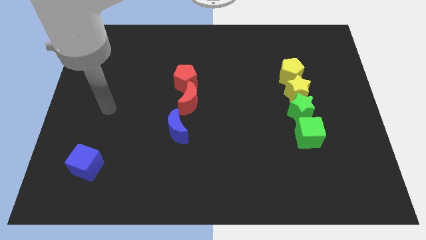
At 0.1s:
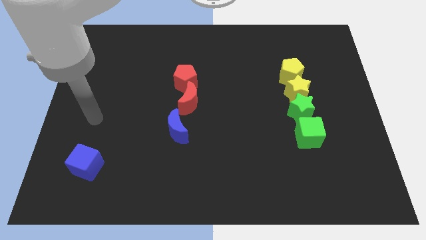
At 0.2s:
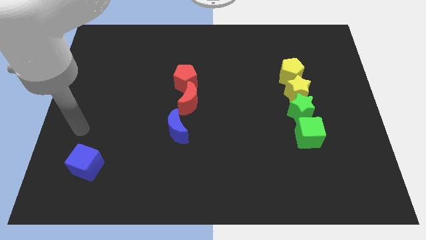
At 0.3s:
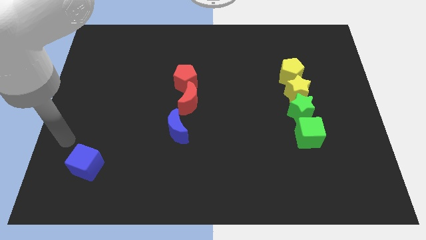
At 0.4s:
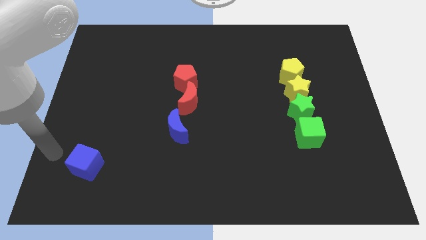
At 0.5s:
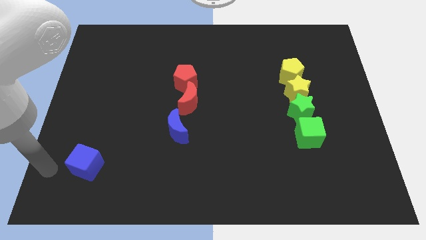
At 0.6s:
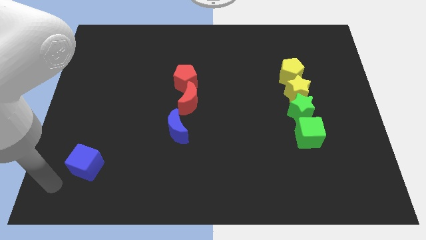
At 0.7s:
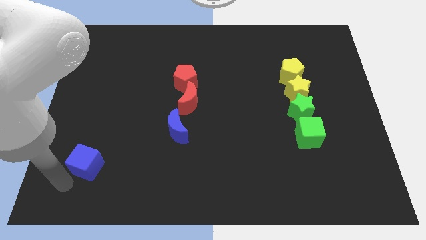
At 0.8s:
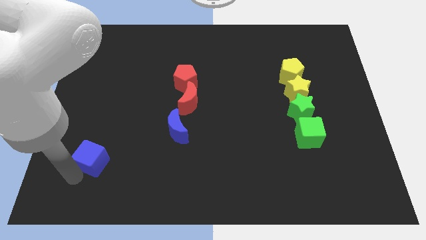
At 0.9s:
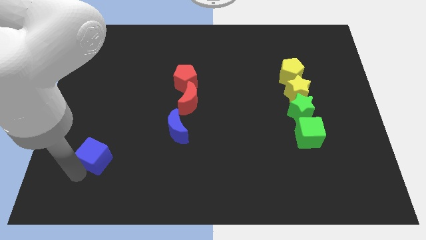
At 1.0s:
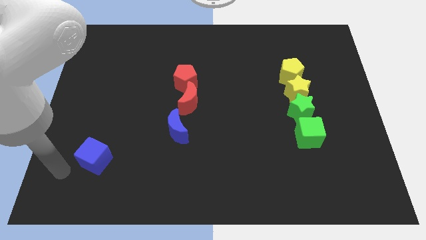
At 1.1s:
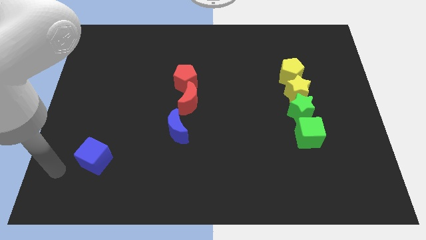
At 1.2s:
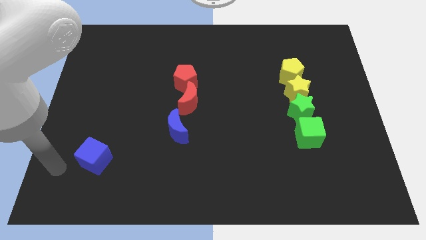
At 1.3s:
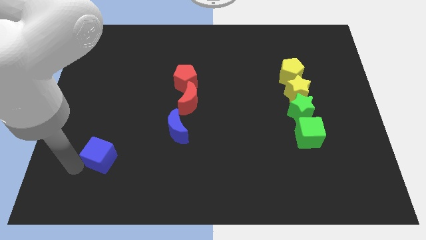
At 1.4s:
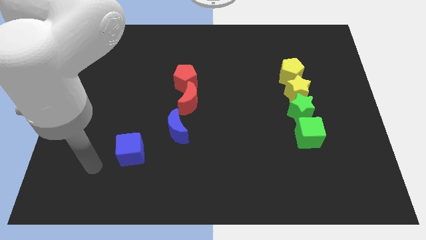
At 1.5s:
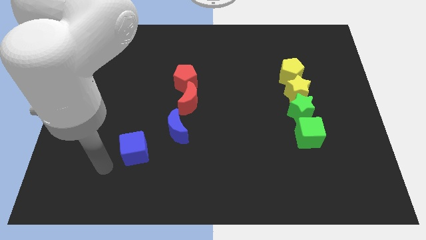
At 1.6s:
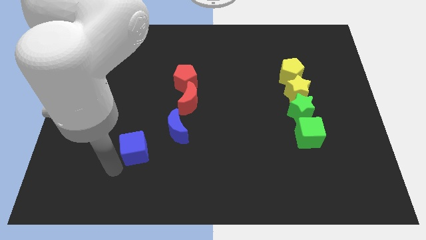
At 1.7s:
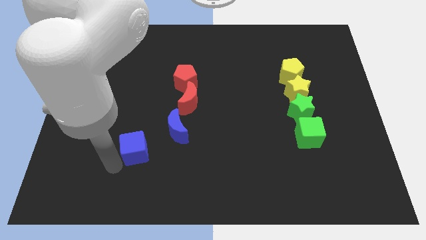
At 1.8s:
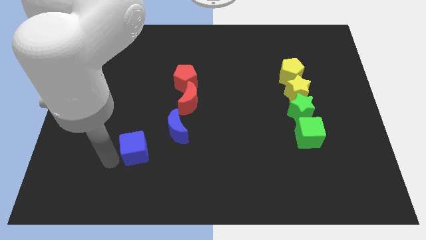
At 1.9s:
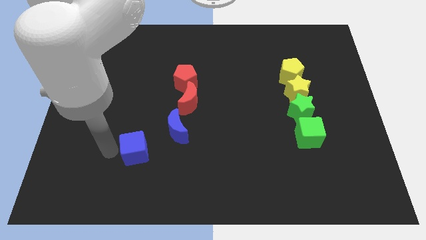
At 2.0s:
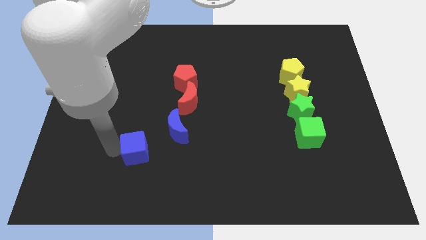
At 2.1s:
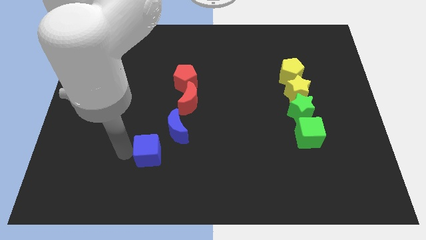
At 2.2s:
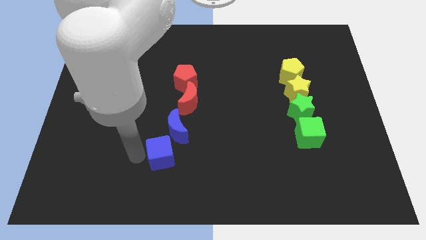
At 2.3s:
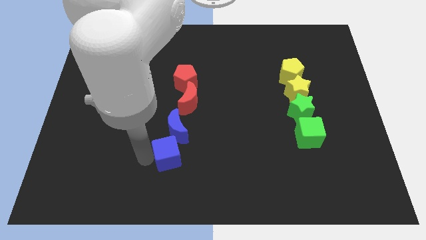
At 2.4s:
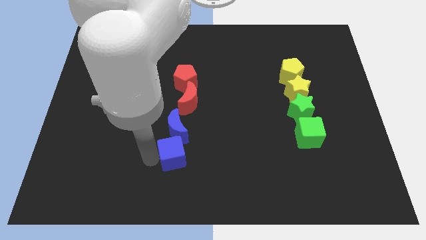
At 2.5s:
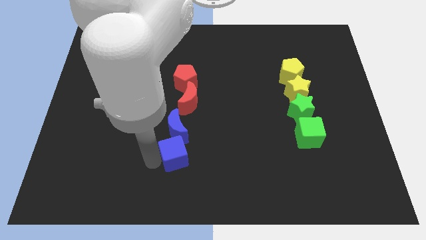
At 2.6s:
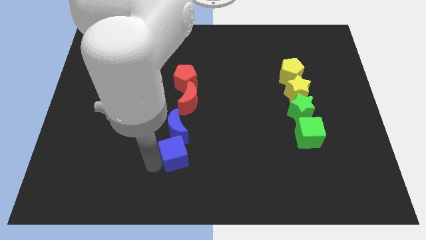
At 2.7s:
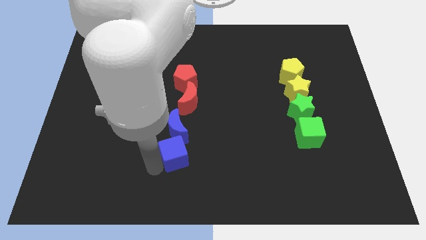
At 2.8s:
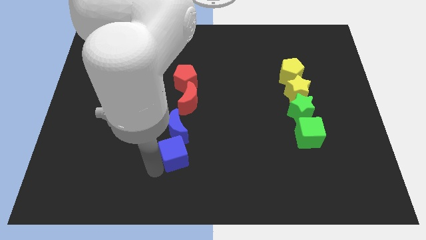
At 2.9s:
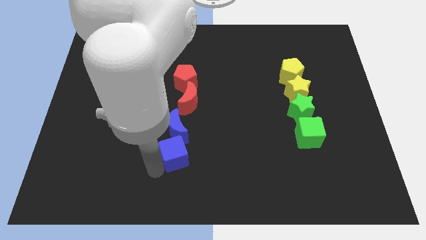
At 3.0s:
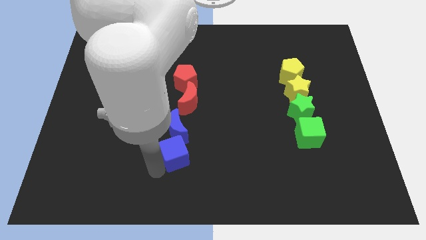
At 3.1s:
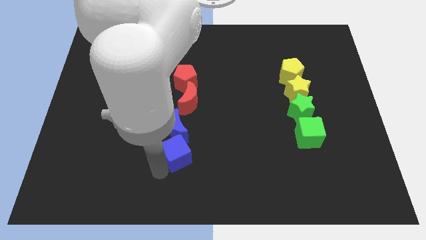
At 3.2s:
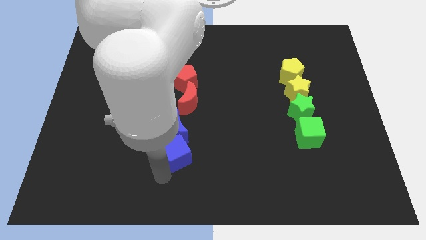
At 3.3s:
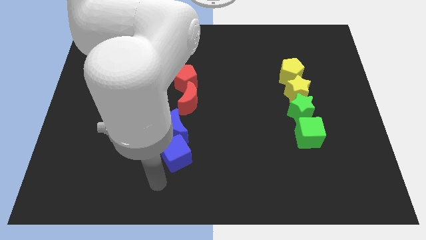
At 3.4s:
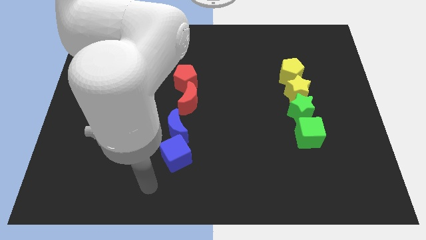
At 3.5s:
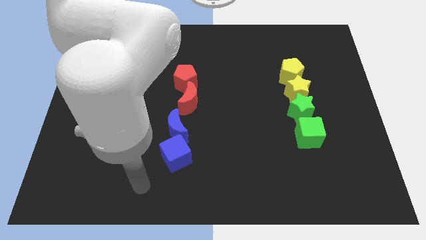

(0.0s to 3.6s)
move the blue block towards the bottom side of the blue moon

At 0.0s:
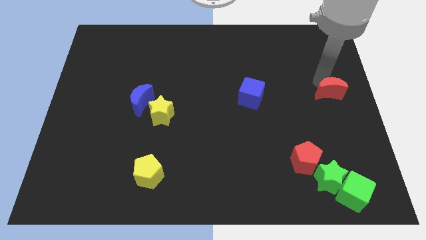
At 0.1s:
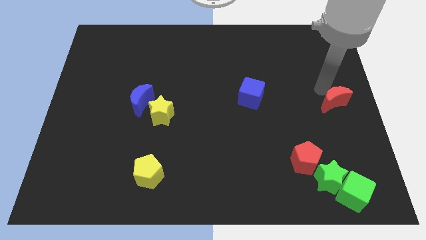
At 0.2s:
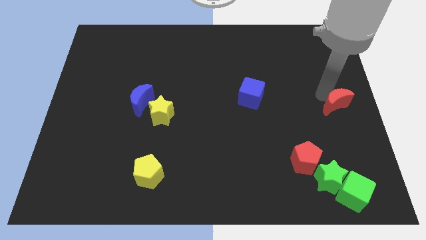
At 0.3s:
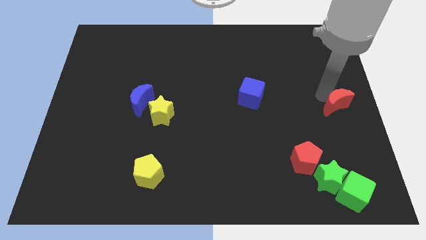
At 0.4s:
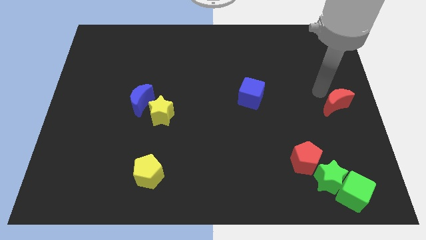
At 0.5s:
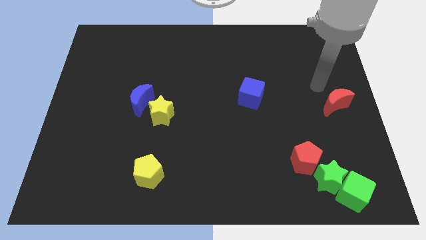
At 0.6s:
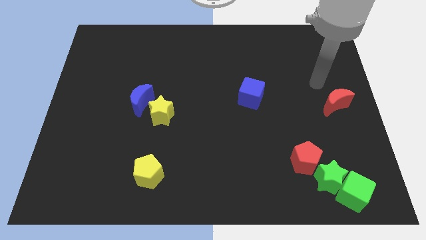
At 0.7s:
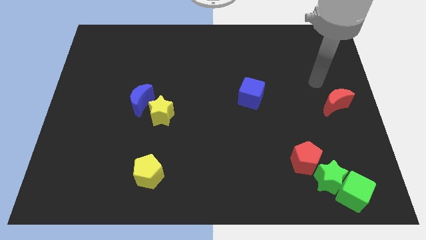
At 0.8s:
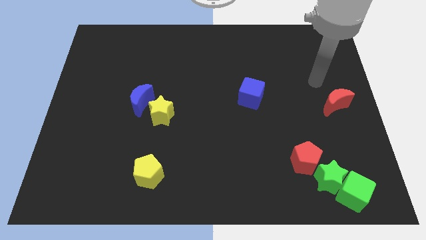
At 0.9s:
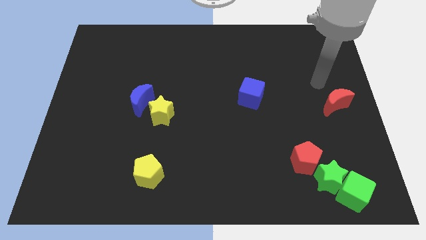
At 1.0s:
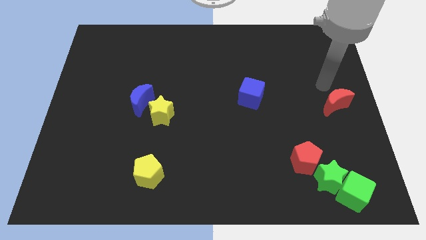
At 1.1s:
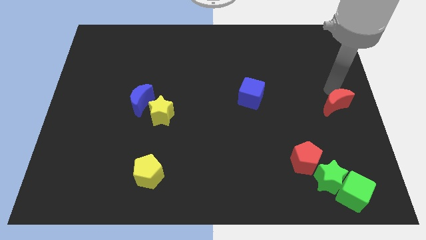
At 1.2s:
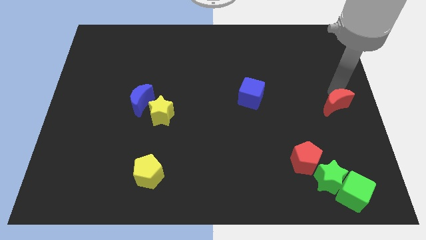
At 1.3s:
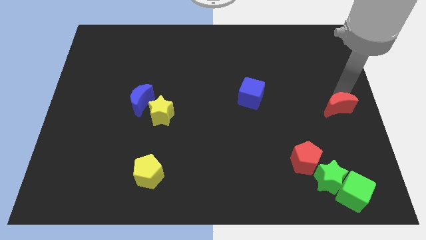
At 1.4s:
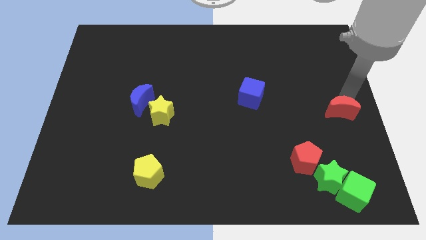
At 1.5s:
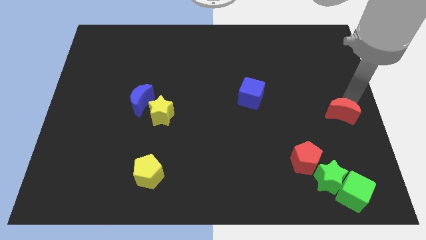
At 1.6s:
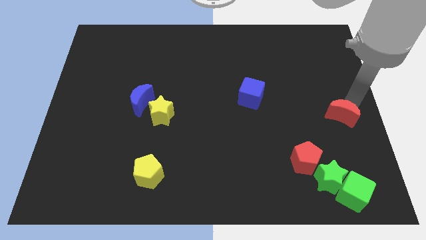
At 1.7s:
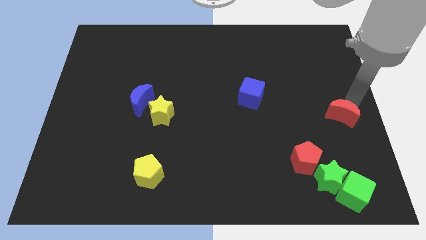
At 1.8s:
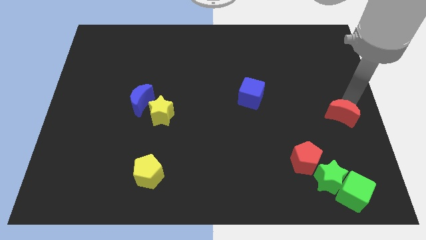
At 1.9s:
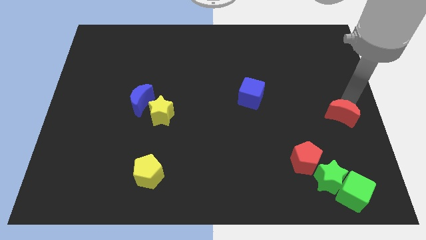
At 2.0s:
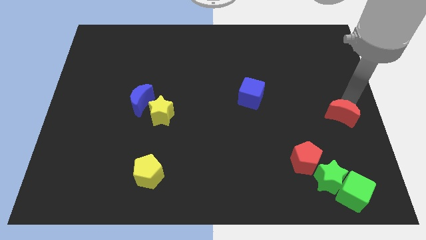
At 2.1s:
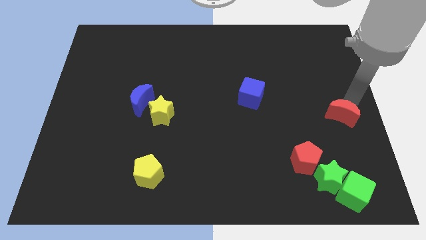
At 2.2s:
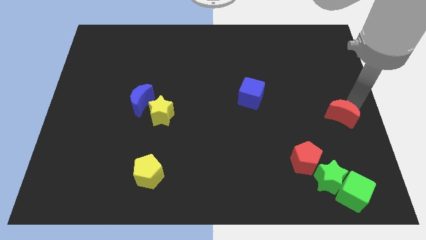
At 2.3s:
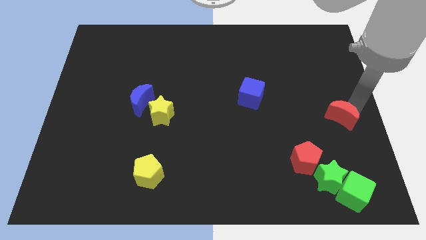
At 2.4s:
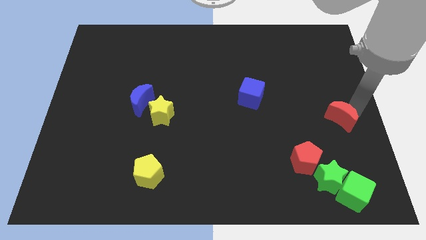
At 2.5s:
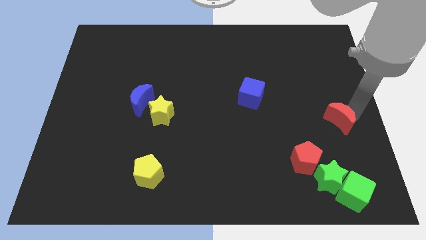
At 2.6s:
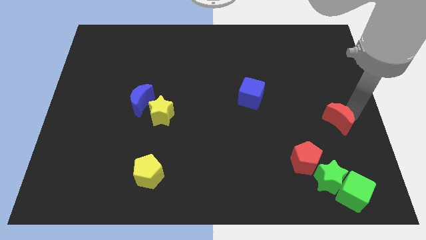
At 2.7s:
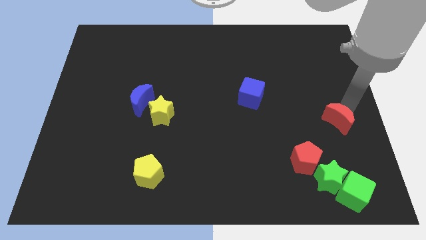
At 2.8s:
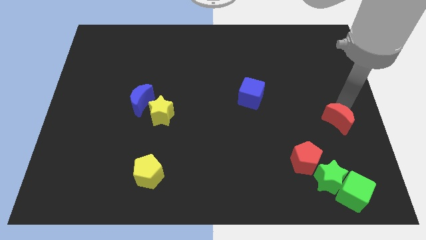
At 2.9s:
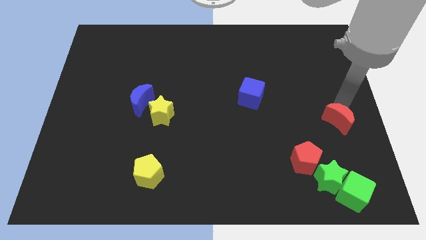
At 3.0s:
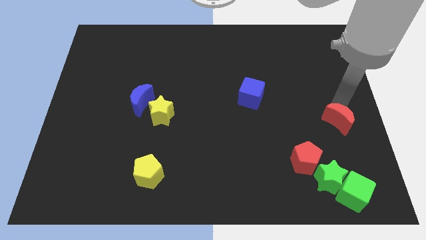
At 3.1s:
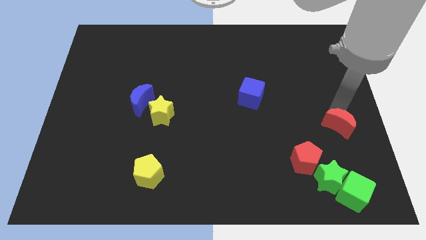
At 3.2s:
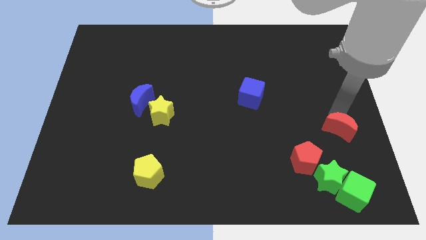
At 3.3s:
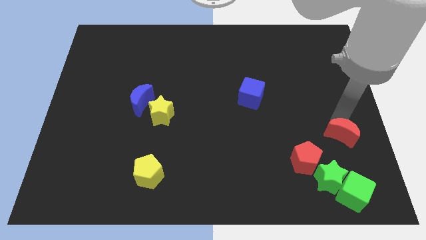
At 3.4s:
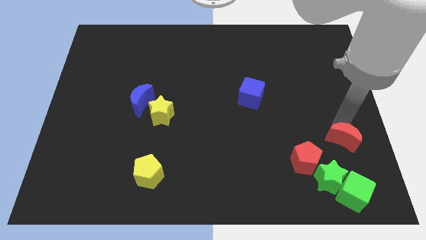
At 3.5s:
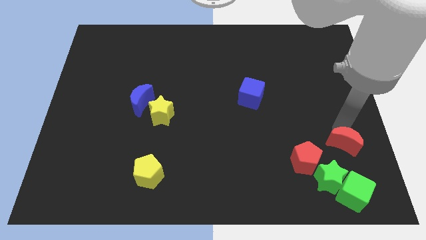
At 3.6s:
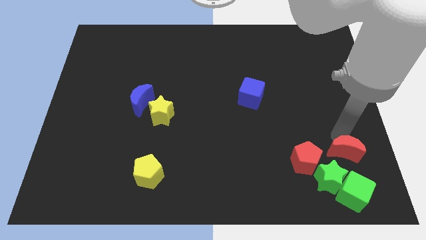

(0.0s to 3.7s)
place the red crescent on top of the green cube

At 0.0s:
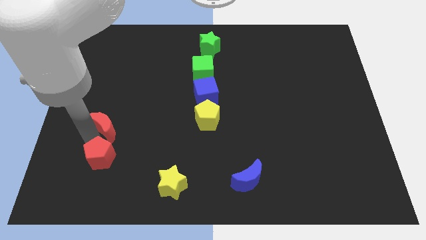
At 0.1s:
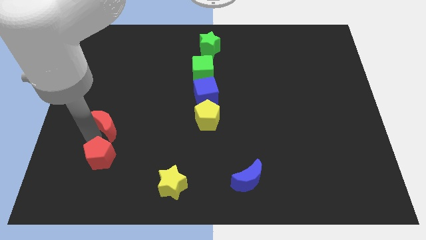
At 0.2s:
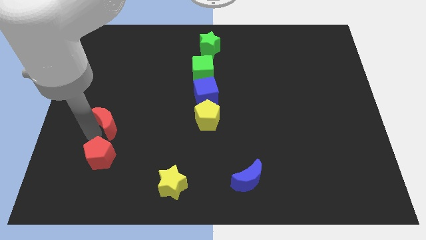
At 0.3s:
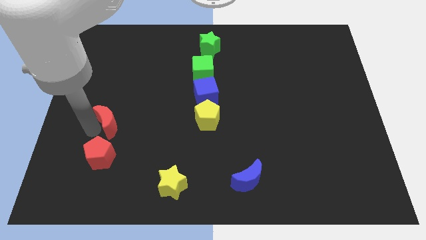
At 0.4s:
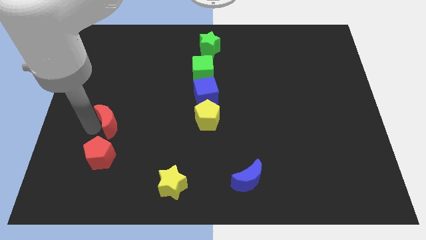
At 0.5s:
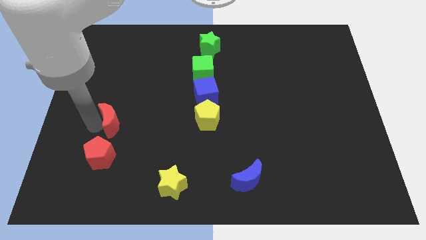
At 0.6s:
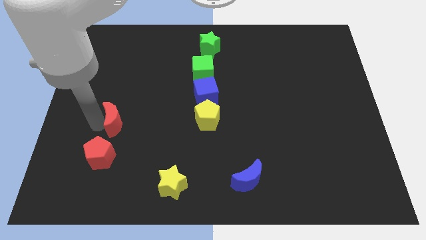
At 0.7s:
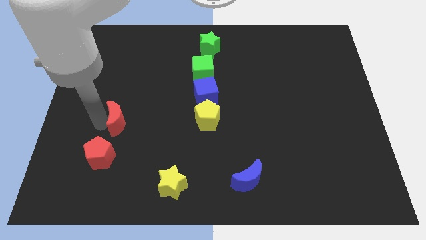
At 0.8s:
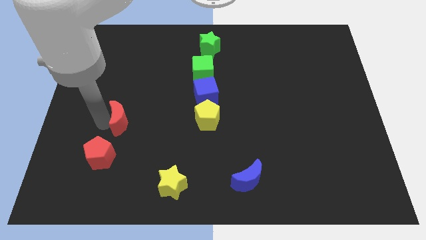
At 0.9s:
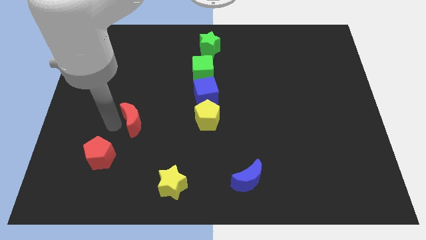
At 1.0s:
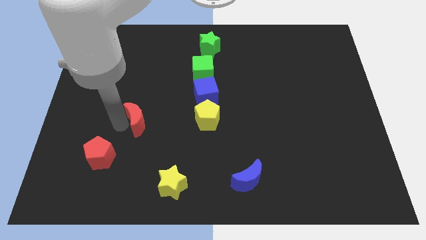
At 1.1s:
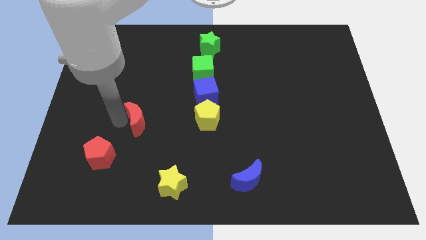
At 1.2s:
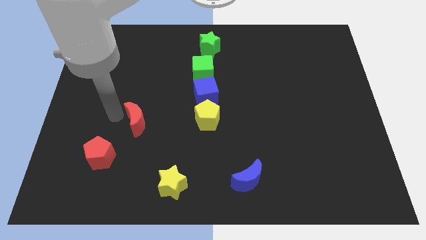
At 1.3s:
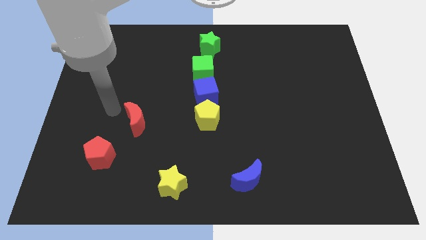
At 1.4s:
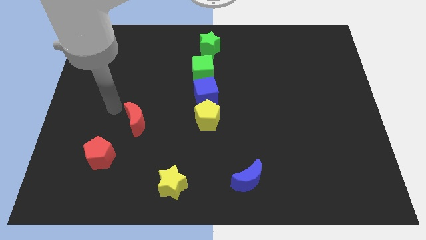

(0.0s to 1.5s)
drag the red moon to the right

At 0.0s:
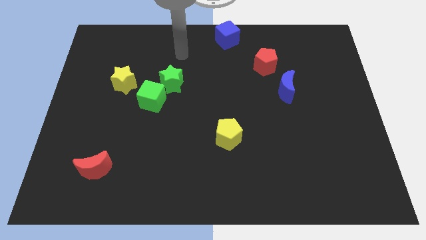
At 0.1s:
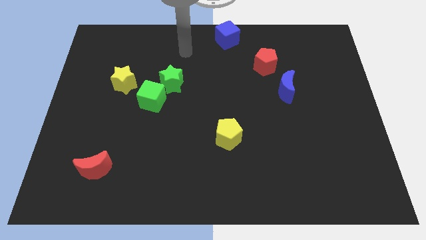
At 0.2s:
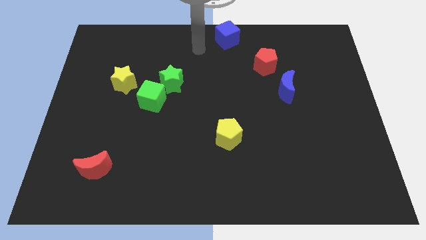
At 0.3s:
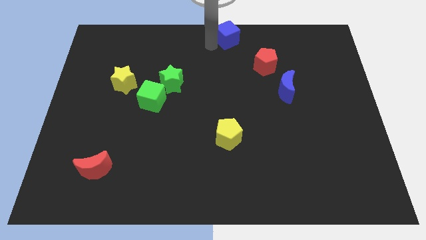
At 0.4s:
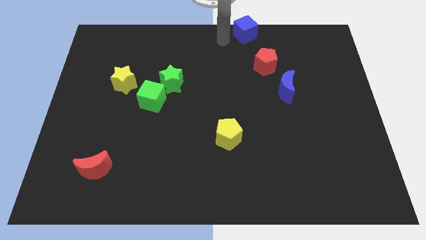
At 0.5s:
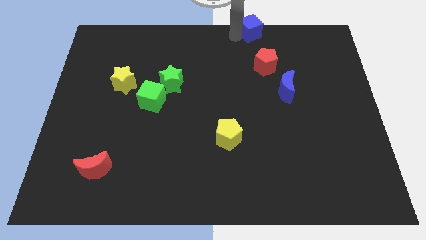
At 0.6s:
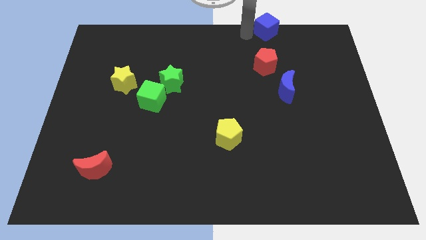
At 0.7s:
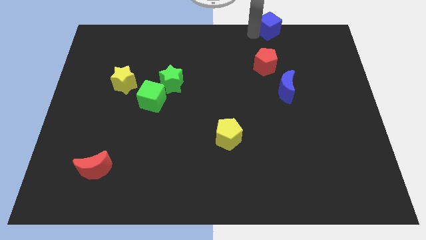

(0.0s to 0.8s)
place the blue cube vertically above the red pentagon
